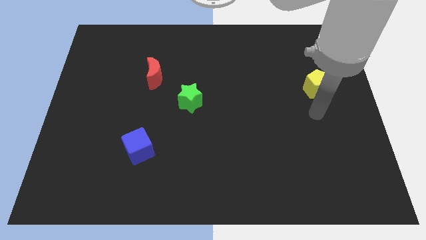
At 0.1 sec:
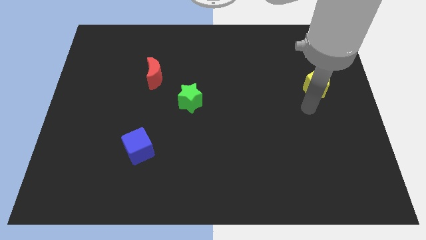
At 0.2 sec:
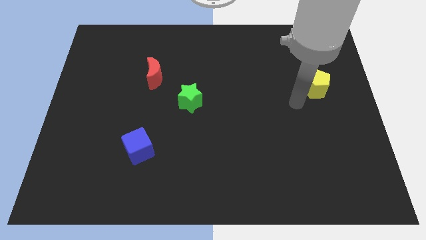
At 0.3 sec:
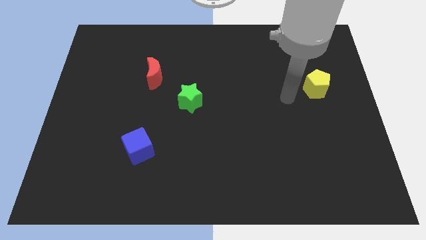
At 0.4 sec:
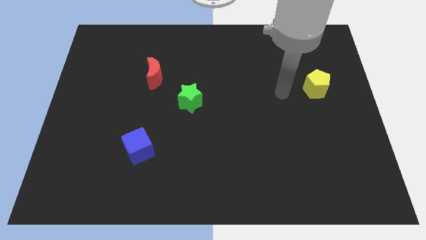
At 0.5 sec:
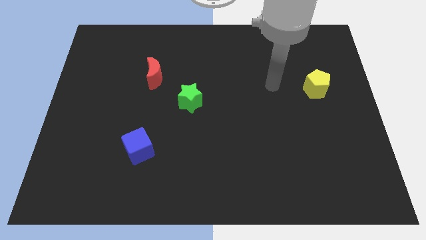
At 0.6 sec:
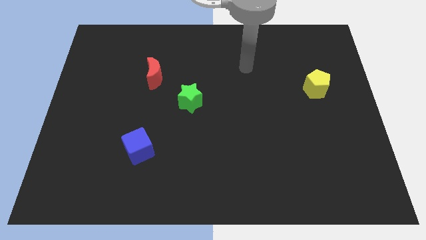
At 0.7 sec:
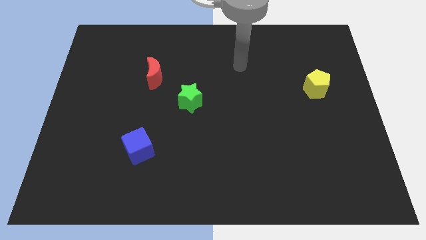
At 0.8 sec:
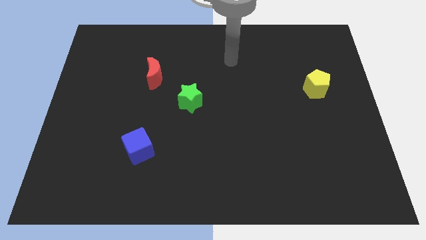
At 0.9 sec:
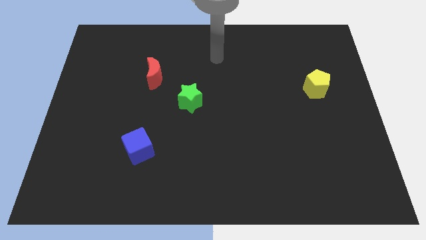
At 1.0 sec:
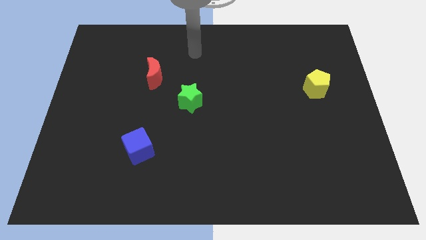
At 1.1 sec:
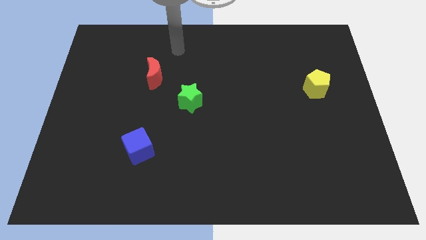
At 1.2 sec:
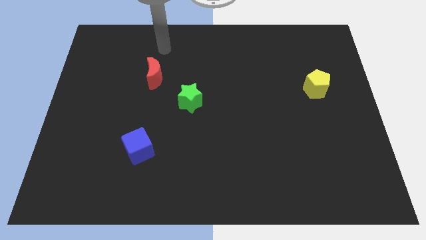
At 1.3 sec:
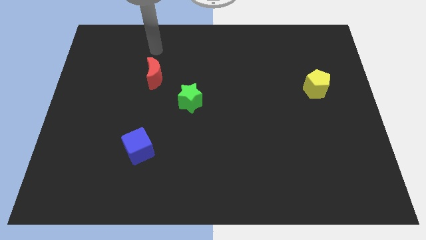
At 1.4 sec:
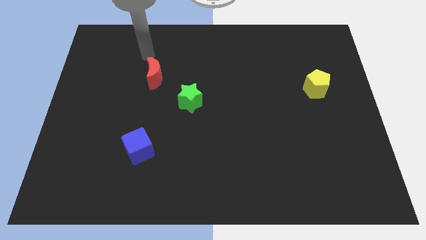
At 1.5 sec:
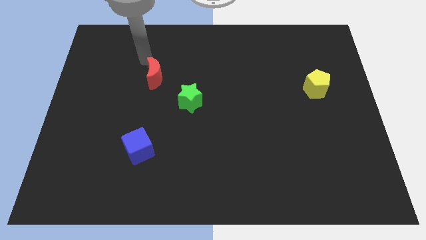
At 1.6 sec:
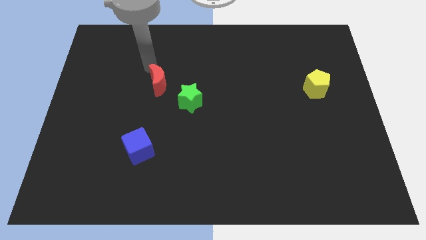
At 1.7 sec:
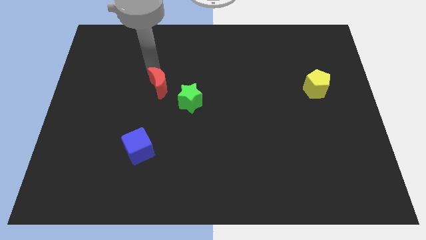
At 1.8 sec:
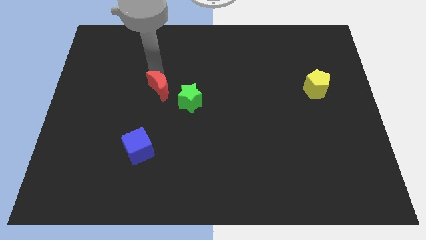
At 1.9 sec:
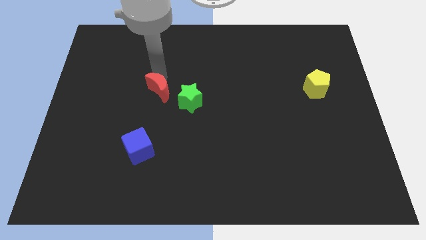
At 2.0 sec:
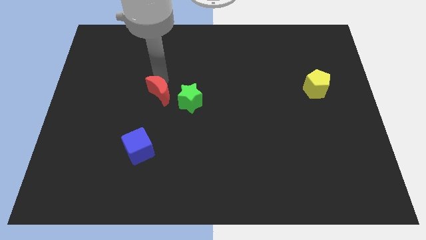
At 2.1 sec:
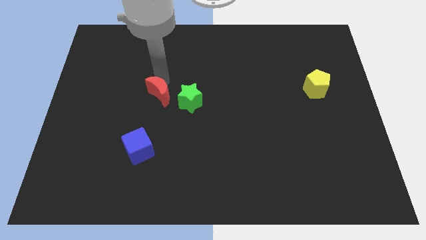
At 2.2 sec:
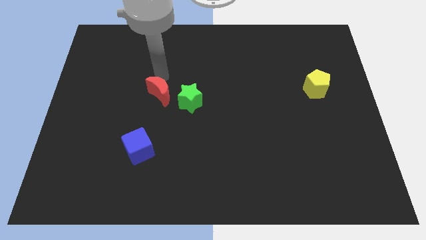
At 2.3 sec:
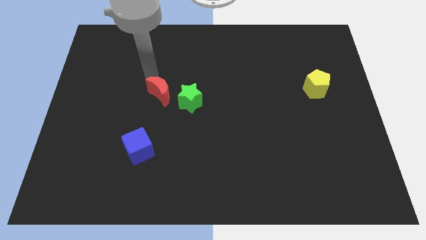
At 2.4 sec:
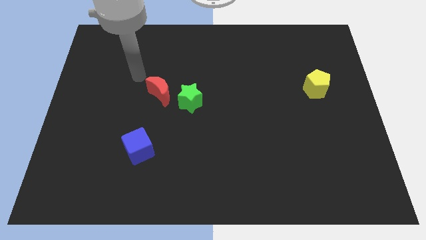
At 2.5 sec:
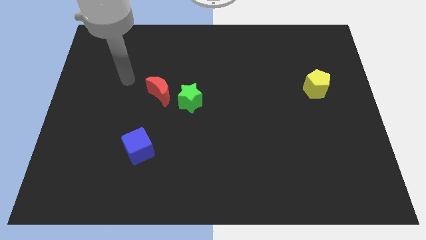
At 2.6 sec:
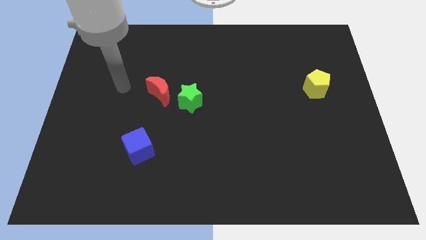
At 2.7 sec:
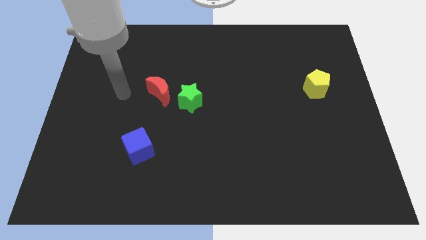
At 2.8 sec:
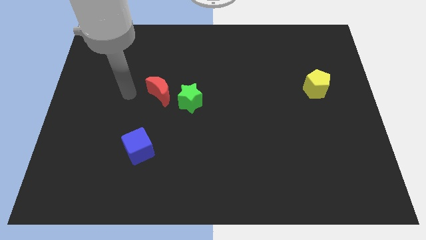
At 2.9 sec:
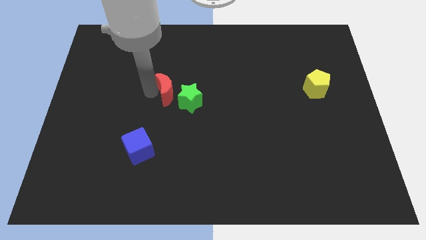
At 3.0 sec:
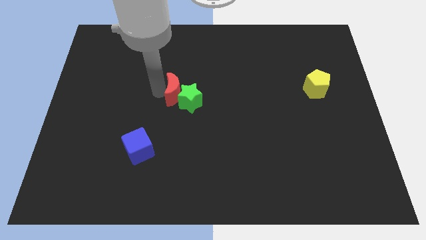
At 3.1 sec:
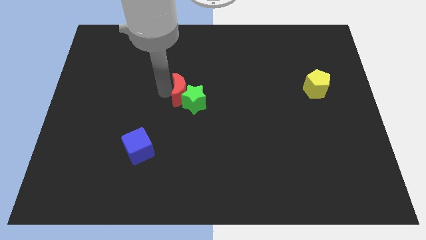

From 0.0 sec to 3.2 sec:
put the moon close to the star

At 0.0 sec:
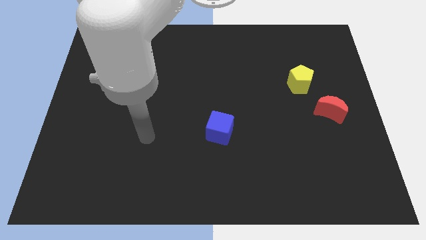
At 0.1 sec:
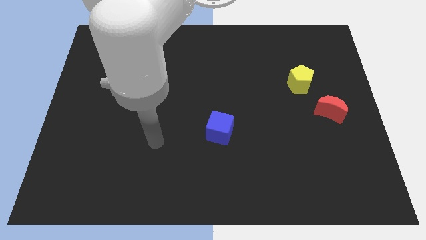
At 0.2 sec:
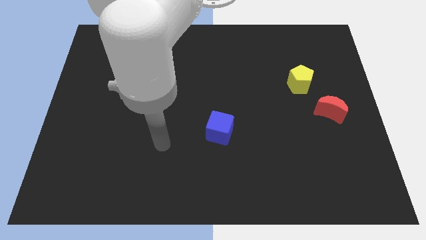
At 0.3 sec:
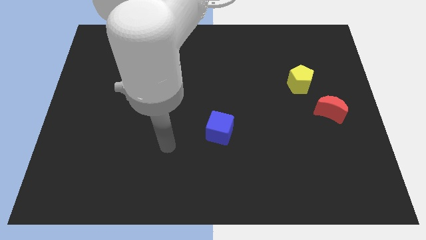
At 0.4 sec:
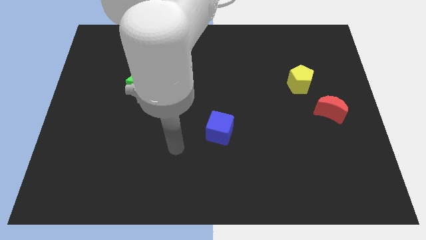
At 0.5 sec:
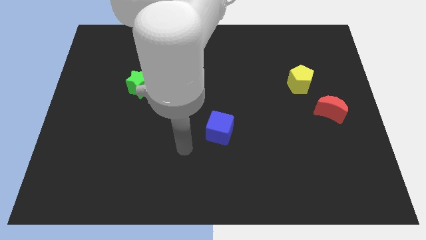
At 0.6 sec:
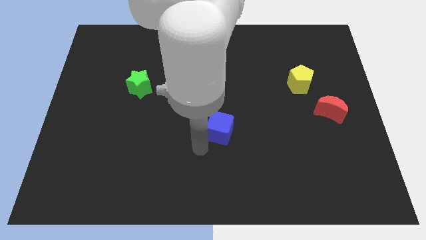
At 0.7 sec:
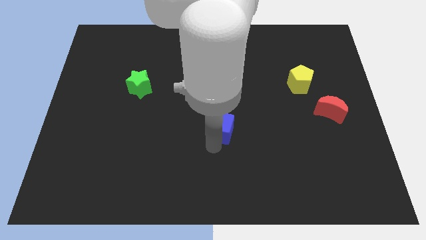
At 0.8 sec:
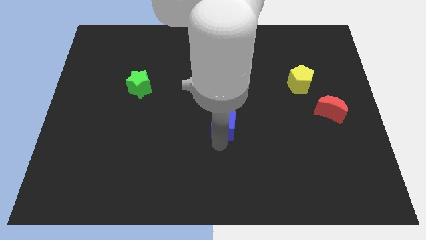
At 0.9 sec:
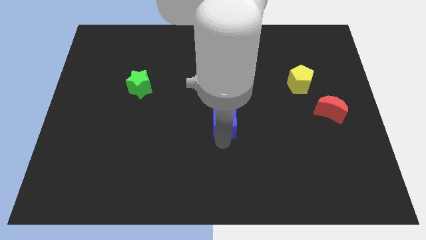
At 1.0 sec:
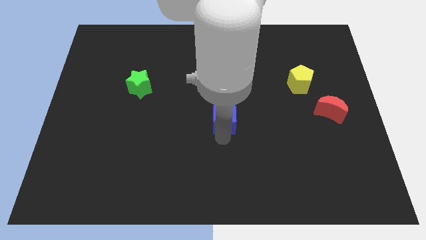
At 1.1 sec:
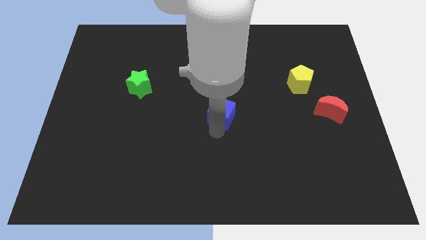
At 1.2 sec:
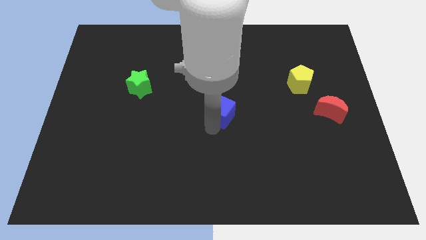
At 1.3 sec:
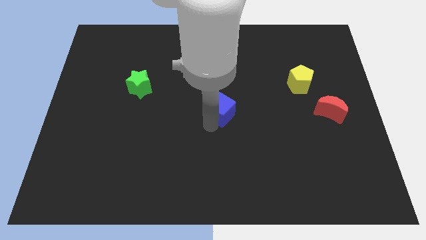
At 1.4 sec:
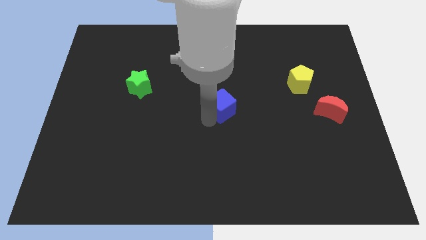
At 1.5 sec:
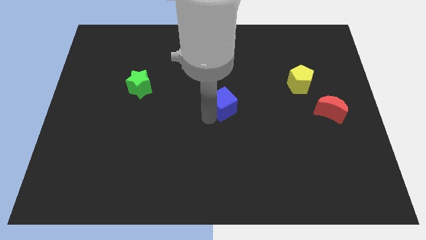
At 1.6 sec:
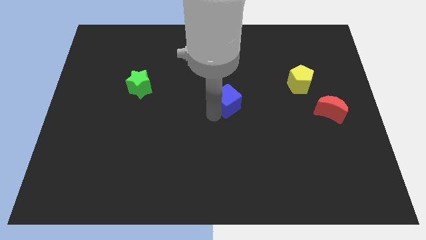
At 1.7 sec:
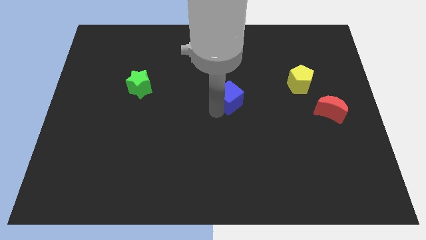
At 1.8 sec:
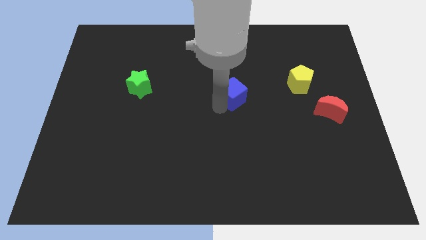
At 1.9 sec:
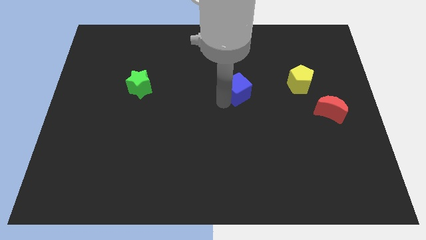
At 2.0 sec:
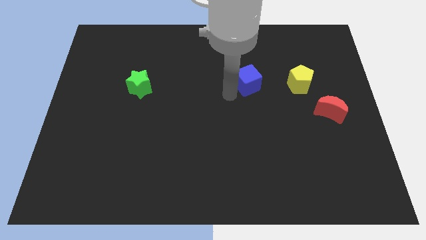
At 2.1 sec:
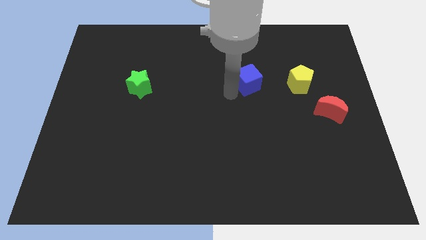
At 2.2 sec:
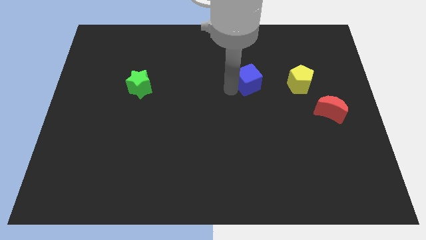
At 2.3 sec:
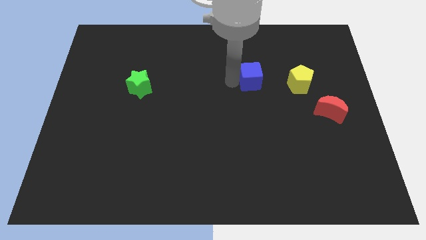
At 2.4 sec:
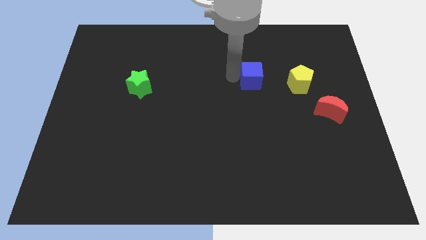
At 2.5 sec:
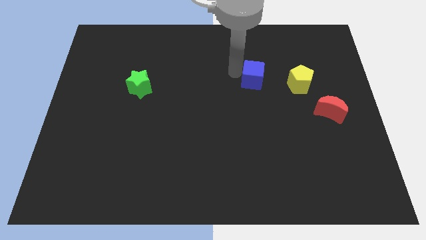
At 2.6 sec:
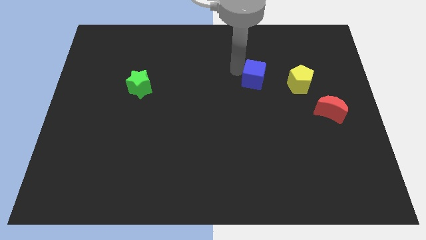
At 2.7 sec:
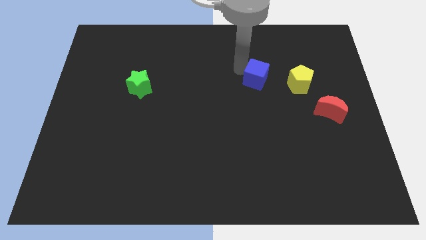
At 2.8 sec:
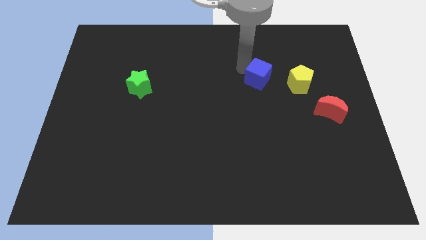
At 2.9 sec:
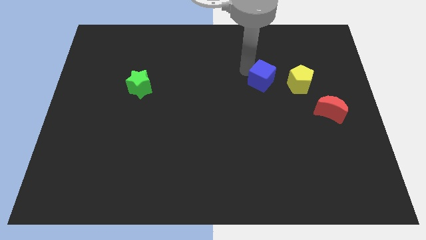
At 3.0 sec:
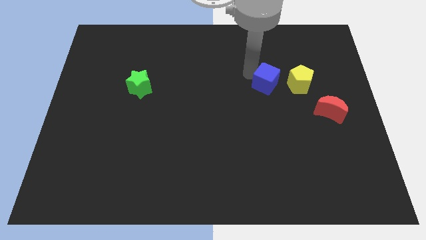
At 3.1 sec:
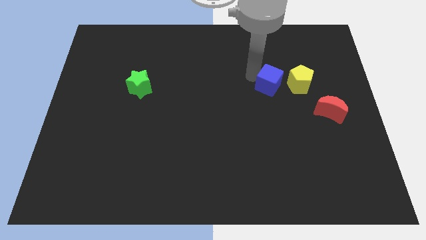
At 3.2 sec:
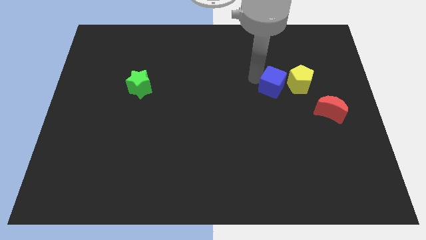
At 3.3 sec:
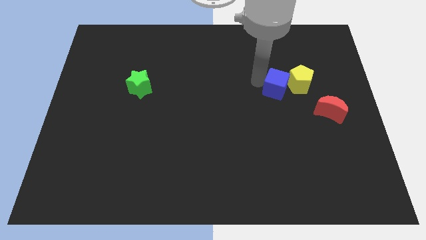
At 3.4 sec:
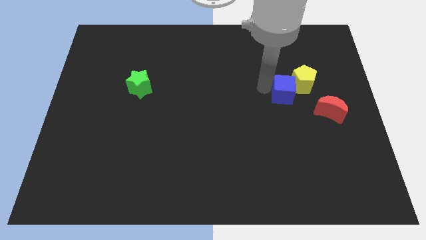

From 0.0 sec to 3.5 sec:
slide the blue block close to the yellow pentagon

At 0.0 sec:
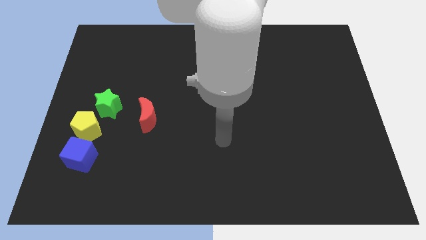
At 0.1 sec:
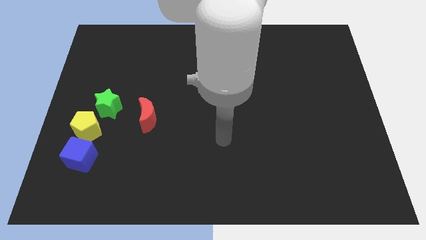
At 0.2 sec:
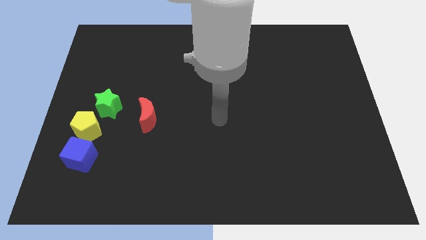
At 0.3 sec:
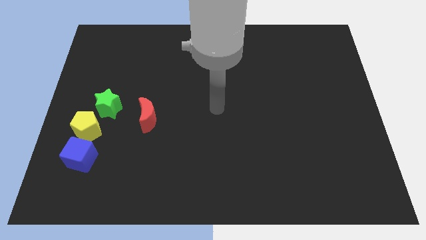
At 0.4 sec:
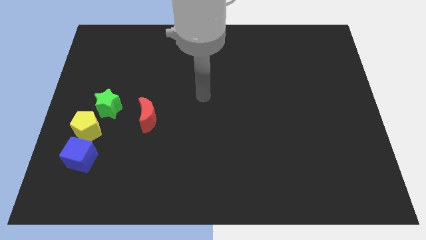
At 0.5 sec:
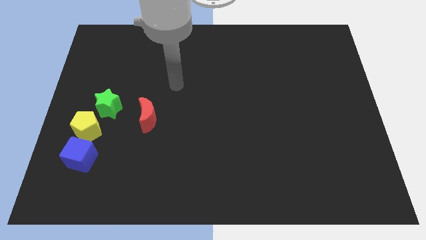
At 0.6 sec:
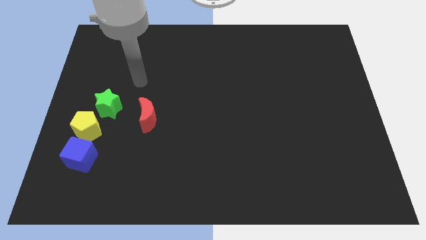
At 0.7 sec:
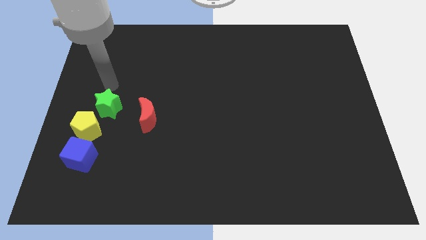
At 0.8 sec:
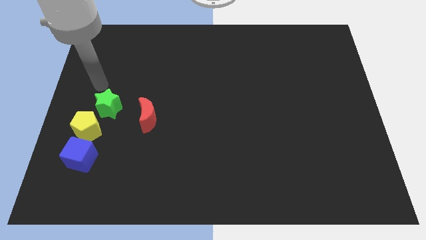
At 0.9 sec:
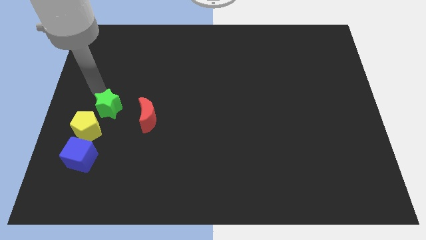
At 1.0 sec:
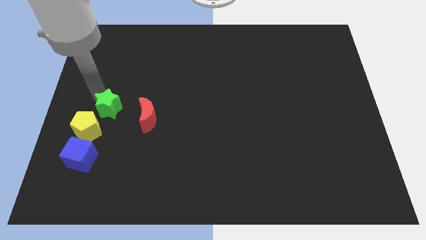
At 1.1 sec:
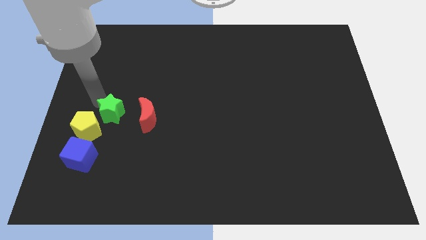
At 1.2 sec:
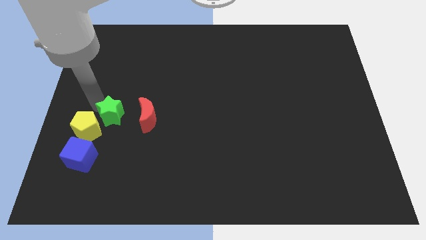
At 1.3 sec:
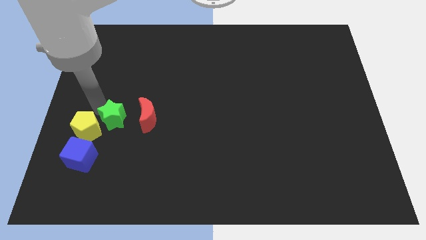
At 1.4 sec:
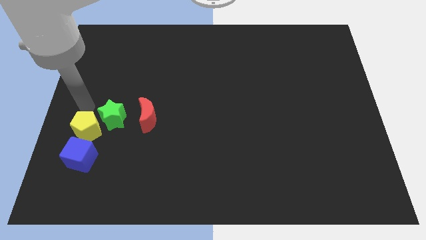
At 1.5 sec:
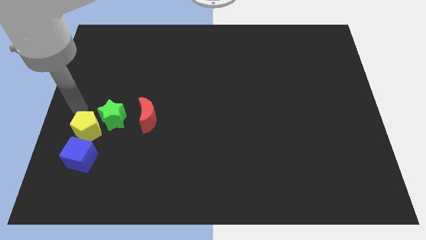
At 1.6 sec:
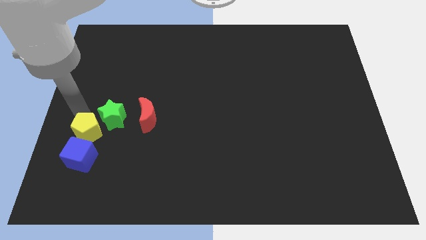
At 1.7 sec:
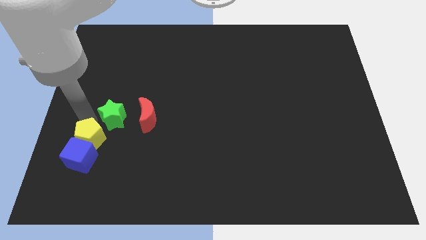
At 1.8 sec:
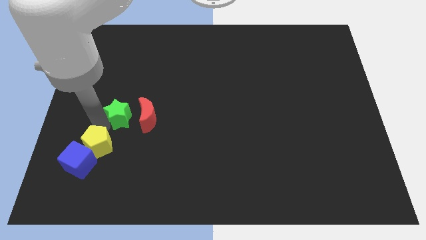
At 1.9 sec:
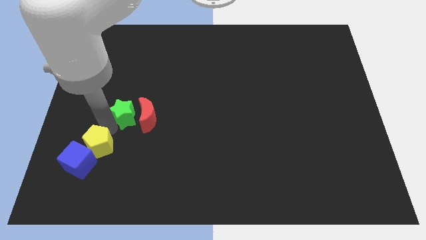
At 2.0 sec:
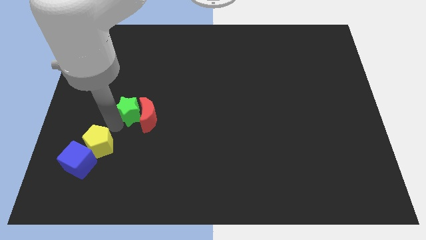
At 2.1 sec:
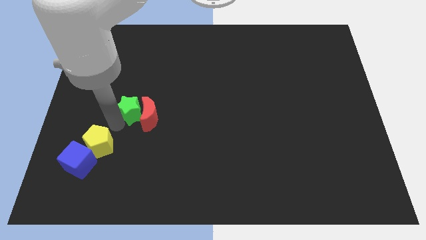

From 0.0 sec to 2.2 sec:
move the star next to the red block
